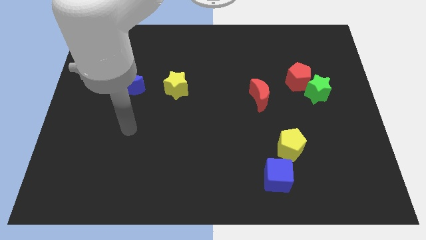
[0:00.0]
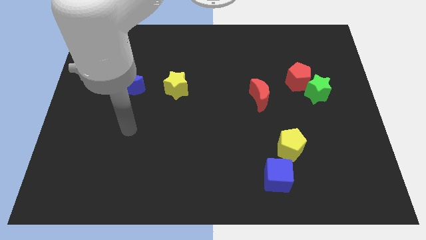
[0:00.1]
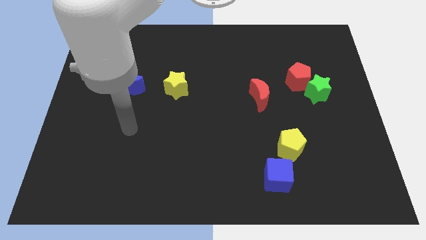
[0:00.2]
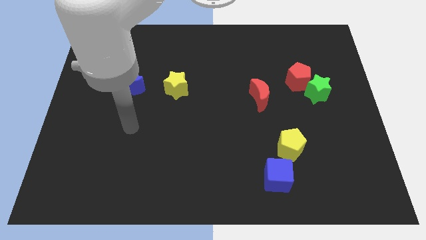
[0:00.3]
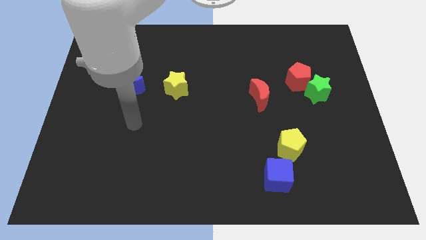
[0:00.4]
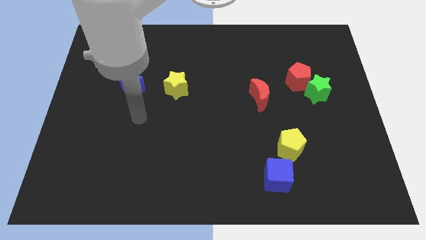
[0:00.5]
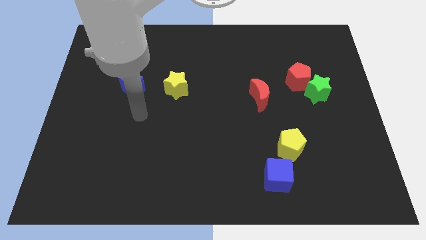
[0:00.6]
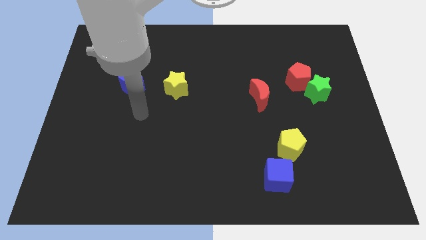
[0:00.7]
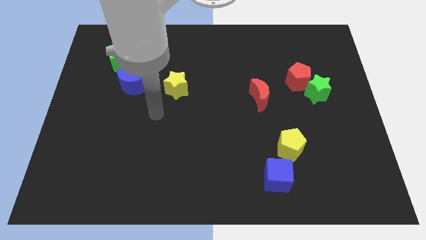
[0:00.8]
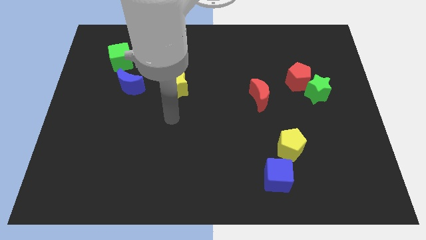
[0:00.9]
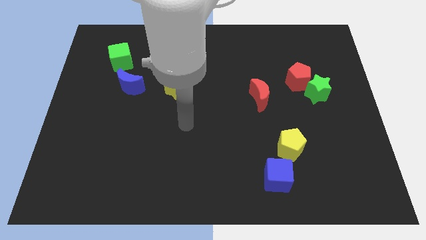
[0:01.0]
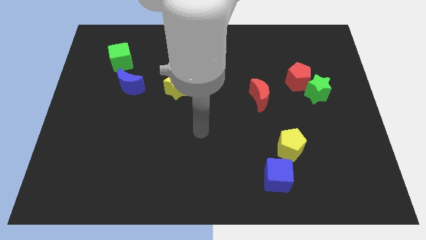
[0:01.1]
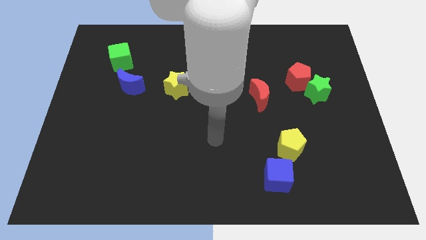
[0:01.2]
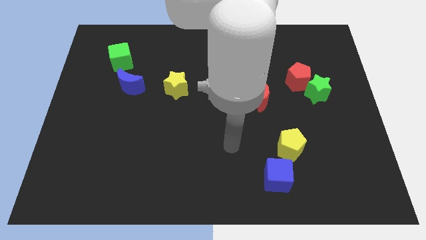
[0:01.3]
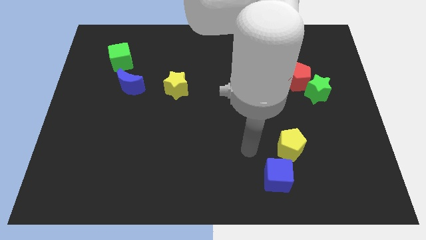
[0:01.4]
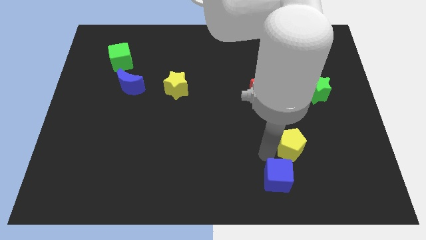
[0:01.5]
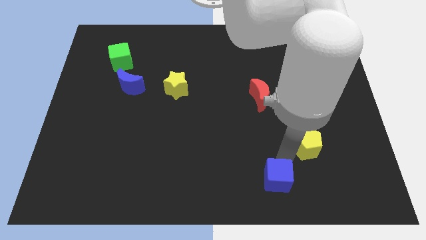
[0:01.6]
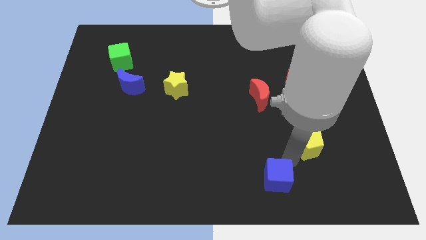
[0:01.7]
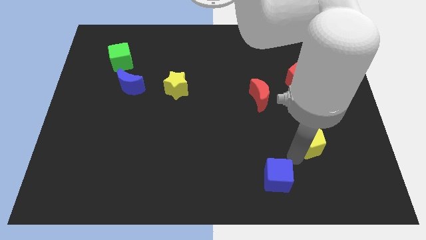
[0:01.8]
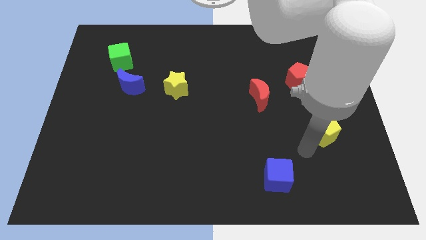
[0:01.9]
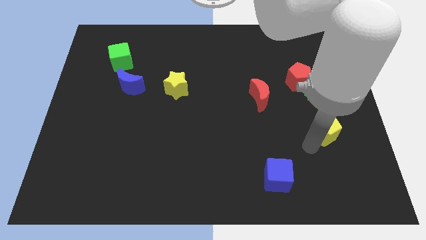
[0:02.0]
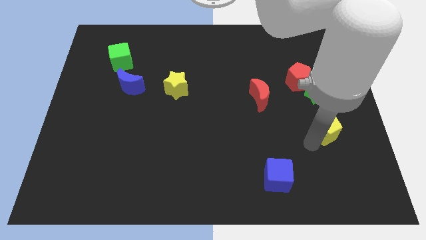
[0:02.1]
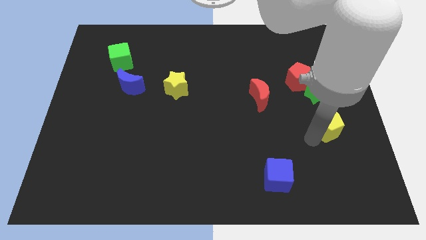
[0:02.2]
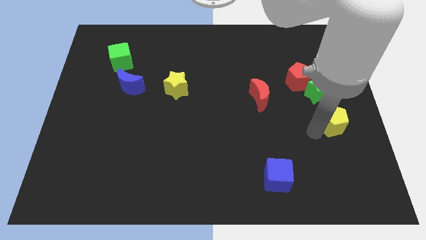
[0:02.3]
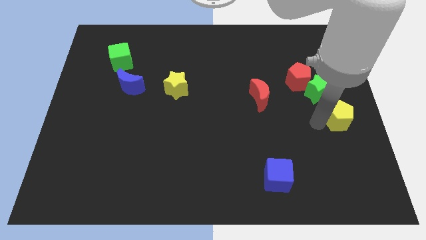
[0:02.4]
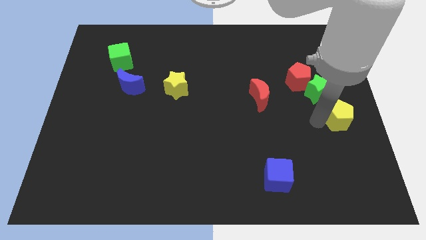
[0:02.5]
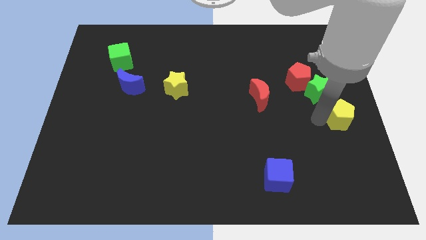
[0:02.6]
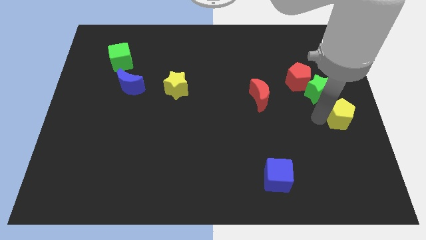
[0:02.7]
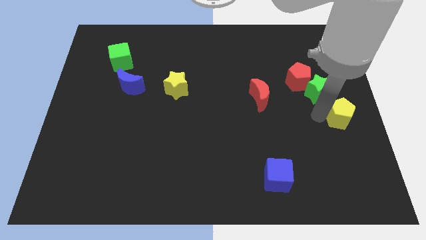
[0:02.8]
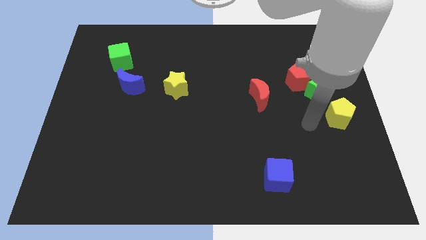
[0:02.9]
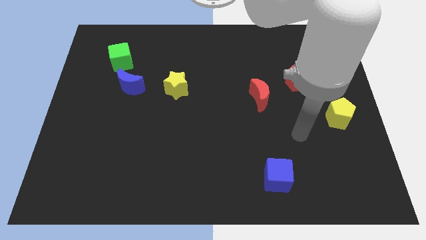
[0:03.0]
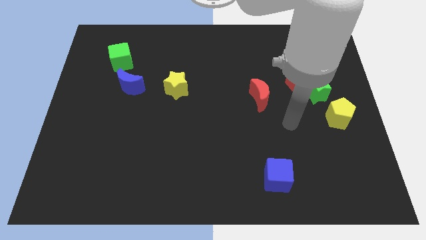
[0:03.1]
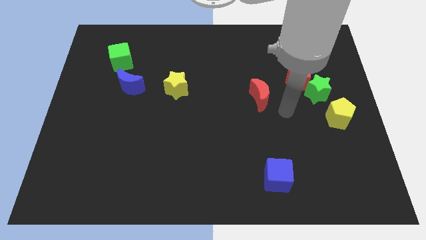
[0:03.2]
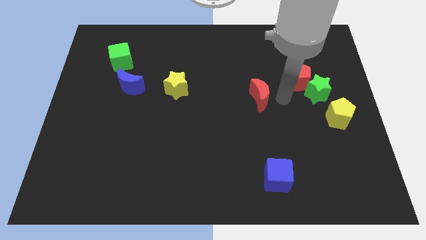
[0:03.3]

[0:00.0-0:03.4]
place the yellow pentagon at the bottom right side of green star

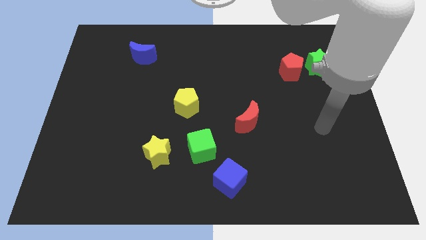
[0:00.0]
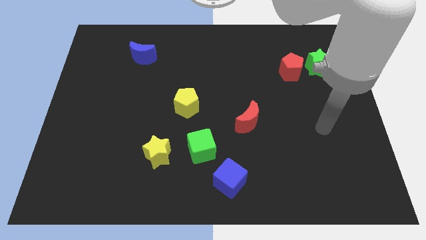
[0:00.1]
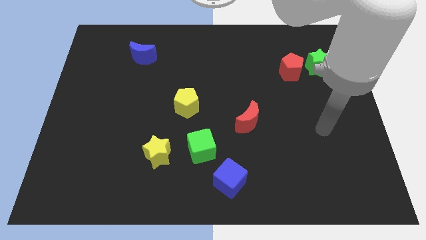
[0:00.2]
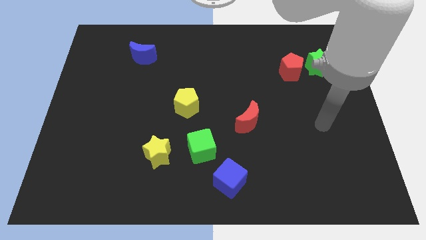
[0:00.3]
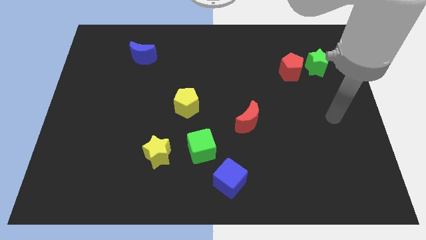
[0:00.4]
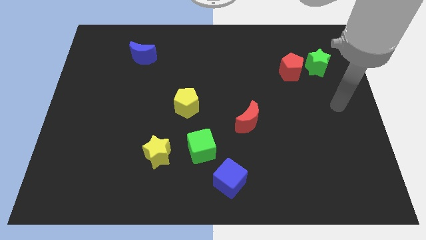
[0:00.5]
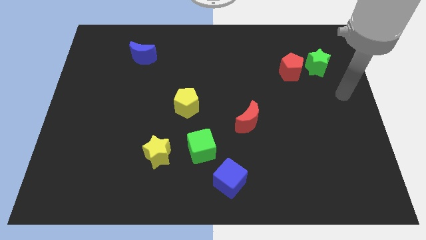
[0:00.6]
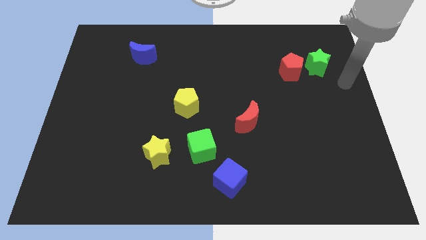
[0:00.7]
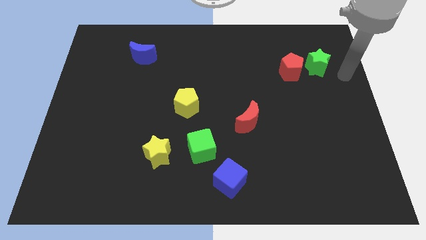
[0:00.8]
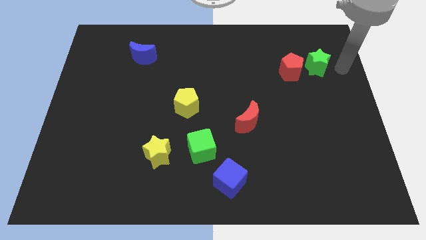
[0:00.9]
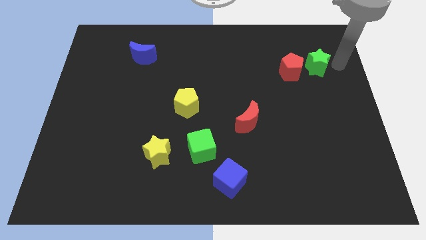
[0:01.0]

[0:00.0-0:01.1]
place your arm to the right side of the green star

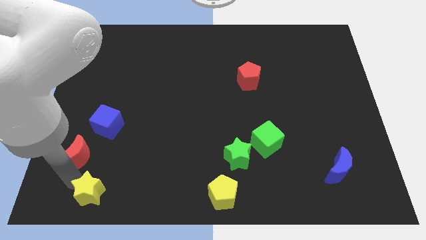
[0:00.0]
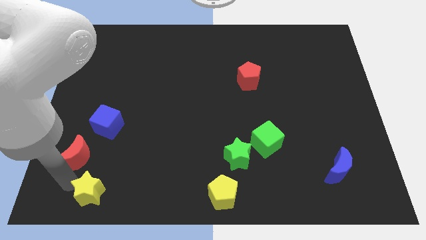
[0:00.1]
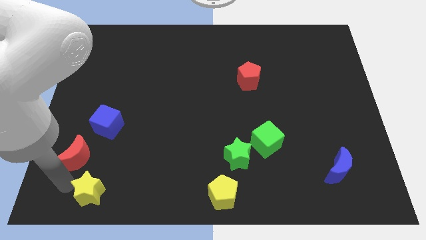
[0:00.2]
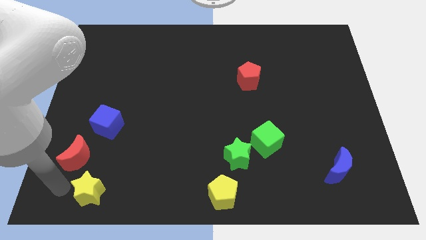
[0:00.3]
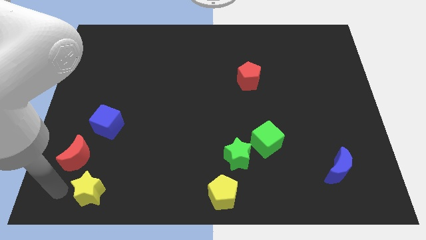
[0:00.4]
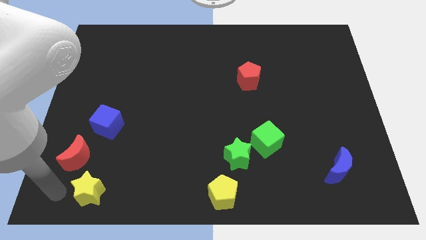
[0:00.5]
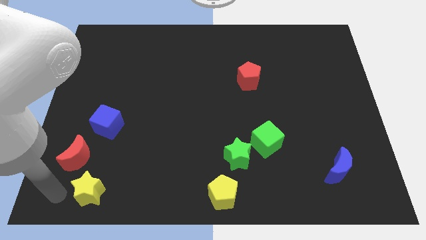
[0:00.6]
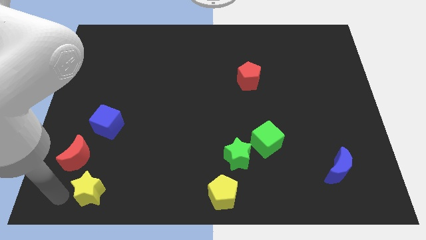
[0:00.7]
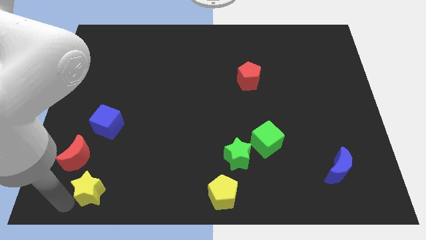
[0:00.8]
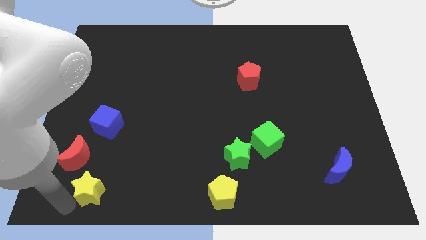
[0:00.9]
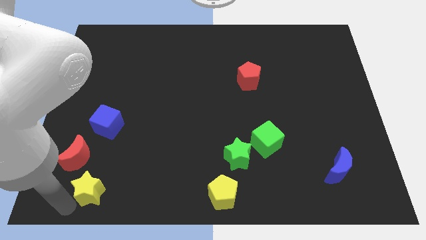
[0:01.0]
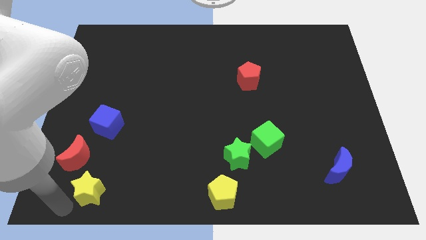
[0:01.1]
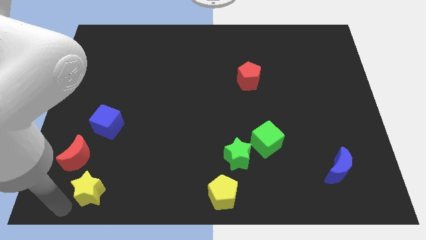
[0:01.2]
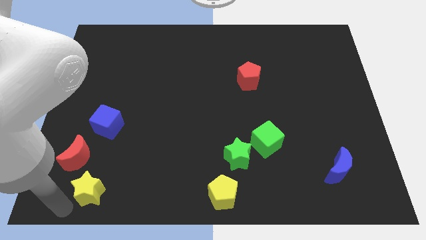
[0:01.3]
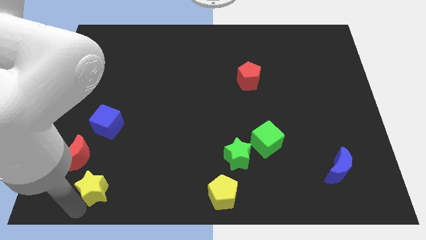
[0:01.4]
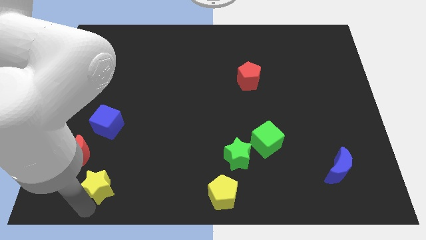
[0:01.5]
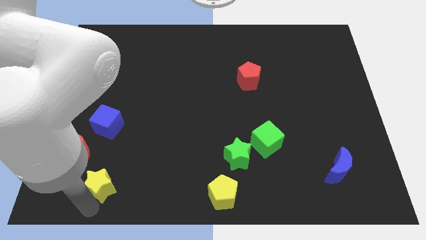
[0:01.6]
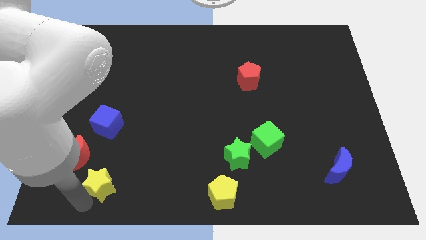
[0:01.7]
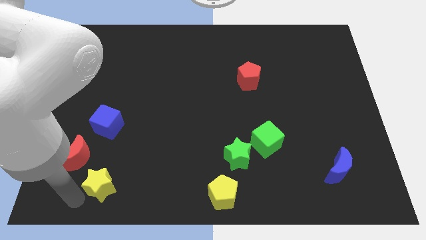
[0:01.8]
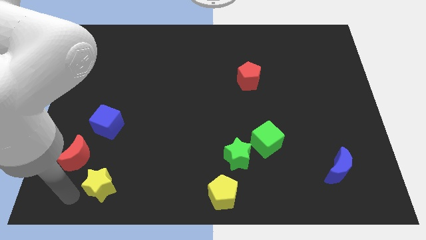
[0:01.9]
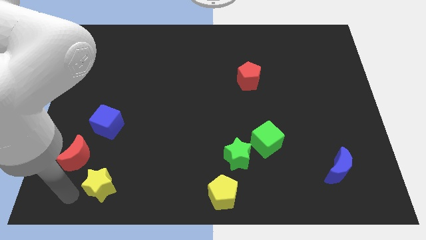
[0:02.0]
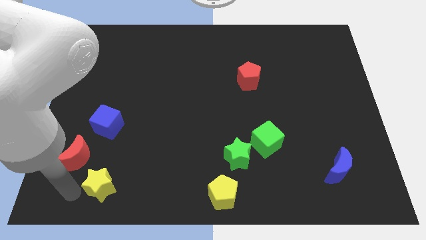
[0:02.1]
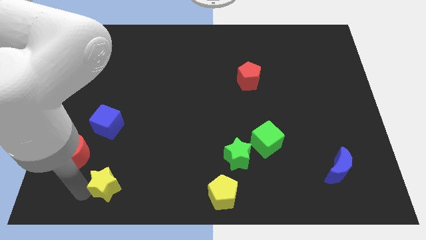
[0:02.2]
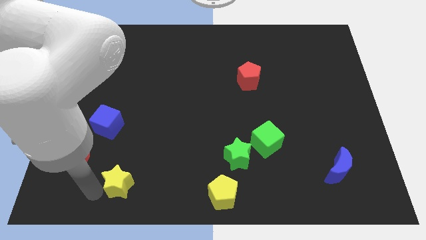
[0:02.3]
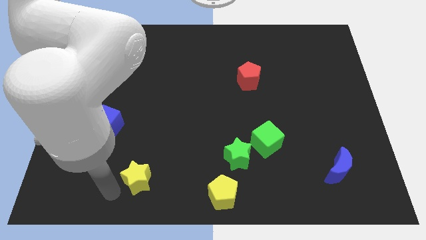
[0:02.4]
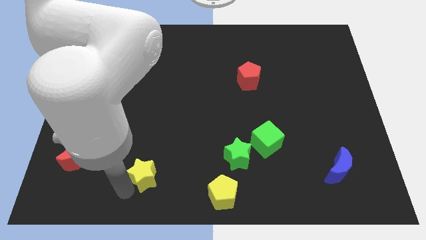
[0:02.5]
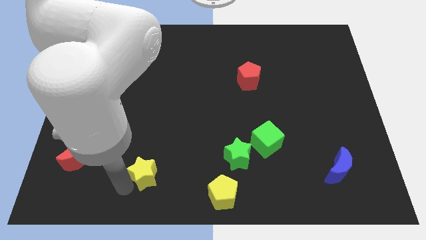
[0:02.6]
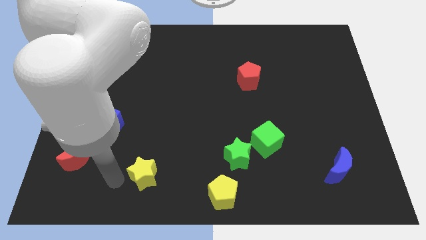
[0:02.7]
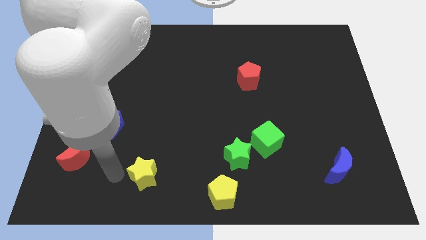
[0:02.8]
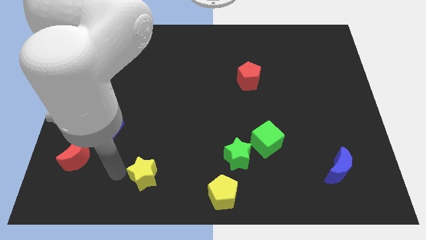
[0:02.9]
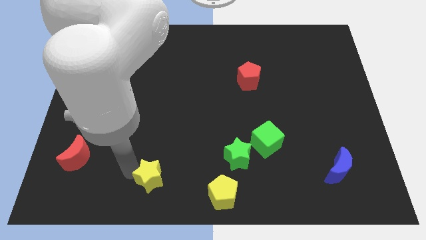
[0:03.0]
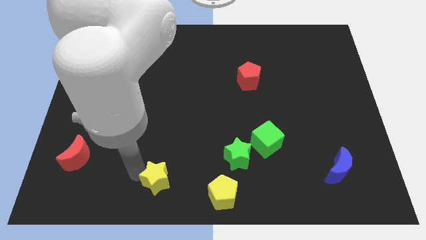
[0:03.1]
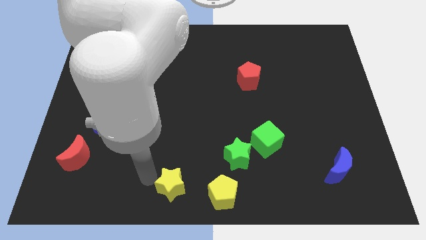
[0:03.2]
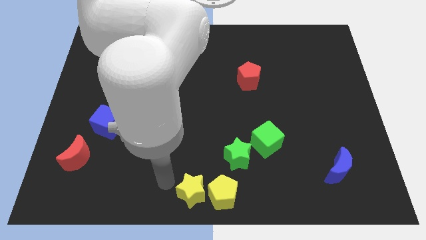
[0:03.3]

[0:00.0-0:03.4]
push the yellow star towards the yellow pentagon

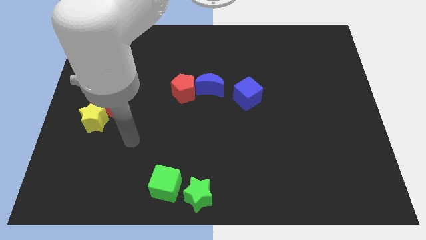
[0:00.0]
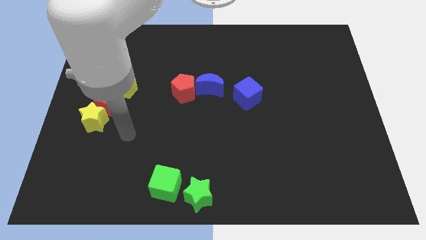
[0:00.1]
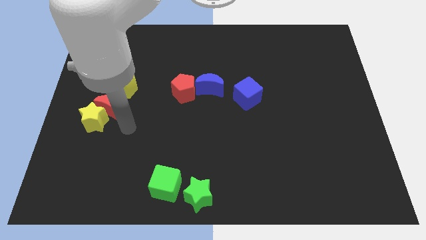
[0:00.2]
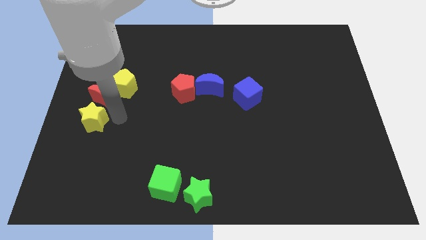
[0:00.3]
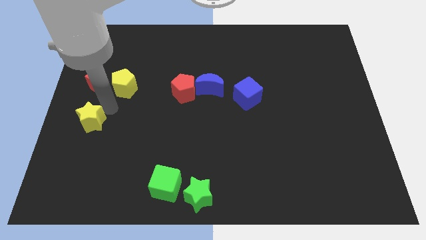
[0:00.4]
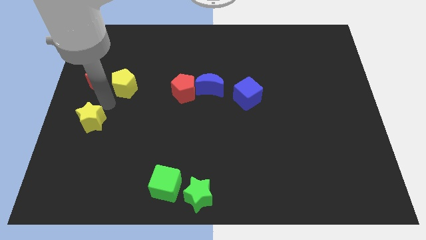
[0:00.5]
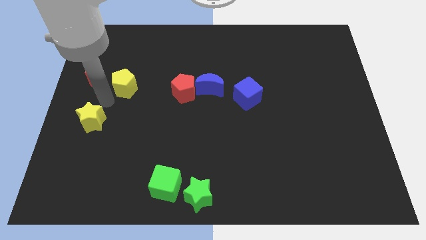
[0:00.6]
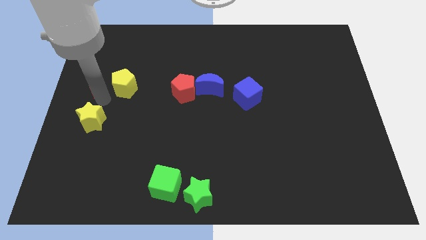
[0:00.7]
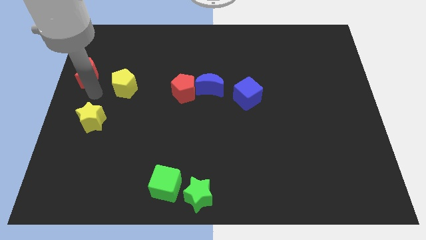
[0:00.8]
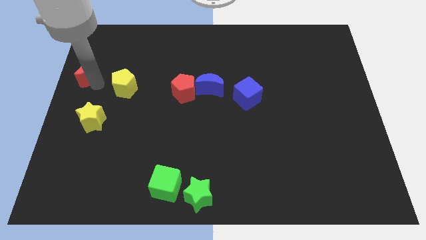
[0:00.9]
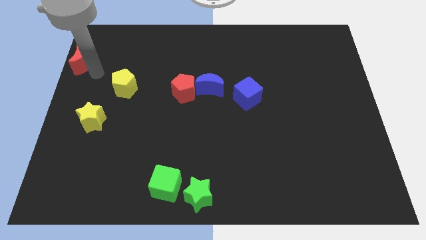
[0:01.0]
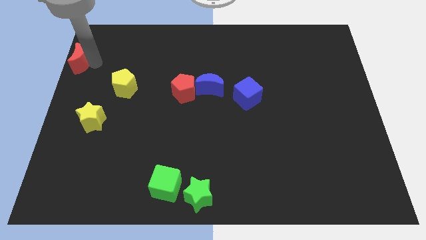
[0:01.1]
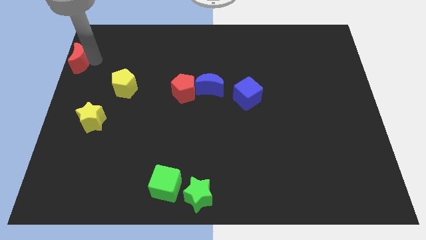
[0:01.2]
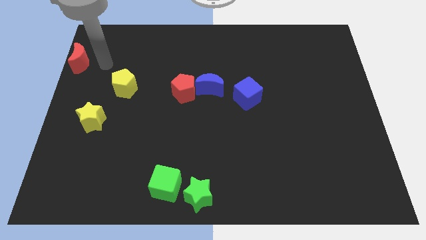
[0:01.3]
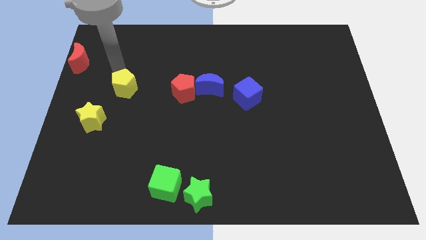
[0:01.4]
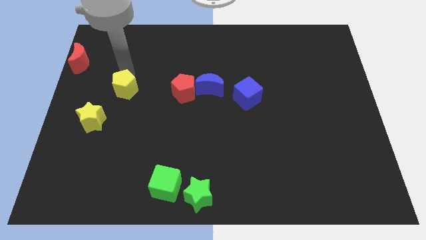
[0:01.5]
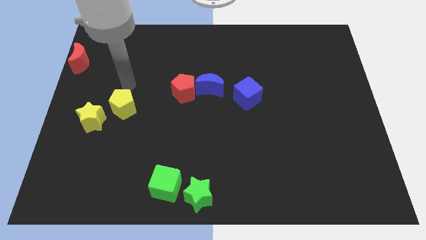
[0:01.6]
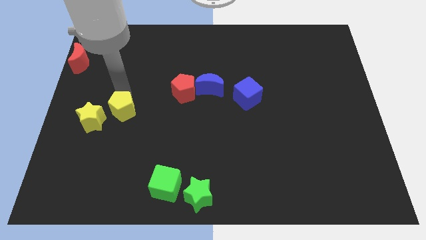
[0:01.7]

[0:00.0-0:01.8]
move the red moon to the top left side of the board
